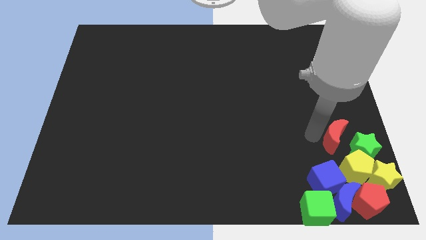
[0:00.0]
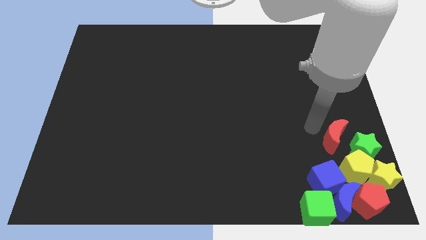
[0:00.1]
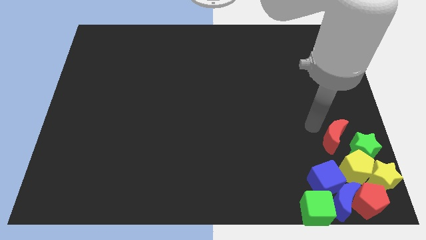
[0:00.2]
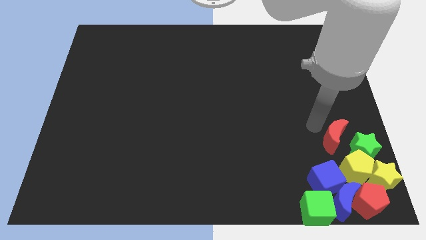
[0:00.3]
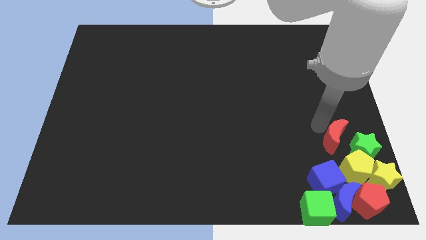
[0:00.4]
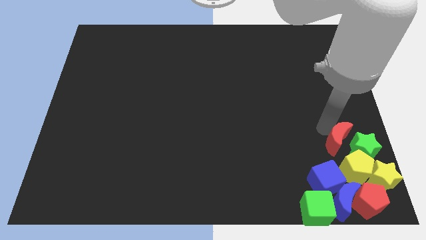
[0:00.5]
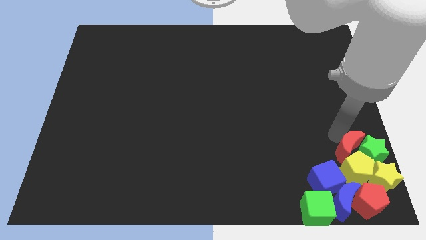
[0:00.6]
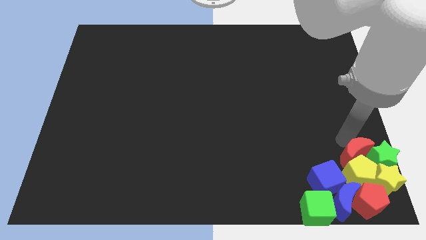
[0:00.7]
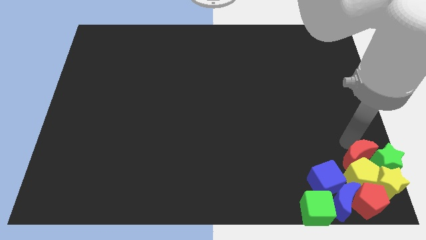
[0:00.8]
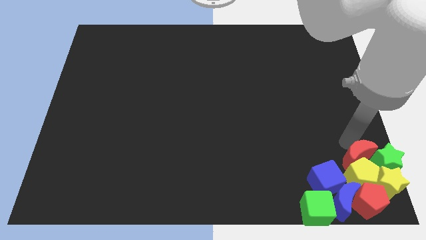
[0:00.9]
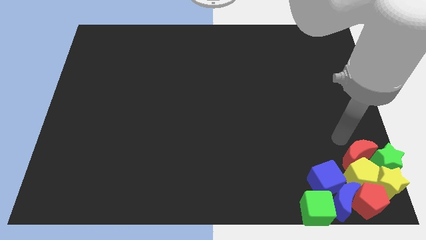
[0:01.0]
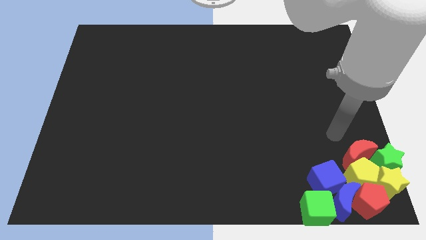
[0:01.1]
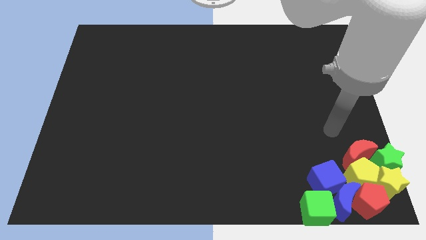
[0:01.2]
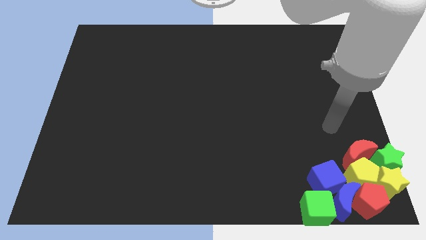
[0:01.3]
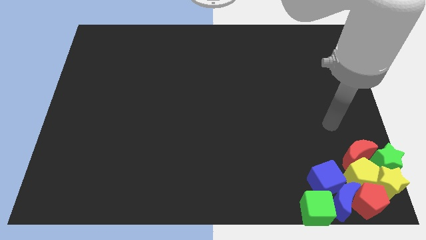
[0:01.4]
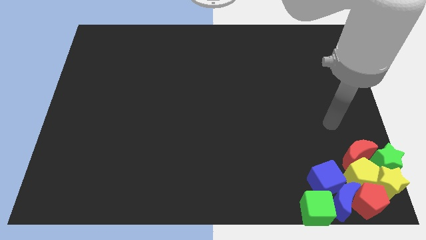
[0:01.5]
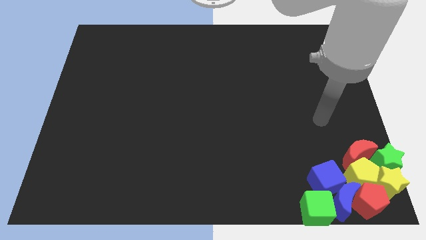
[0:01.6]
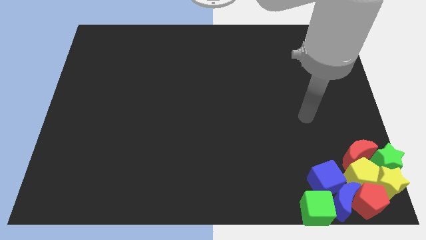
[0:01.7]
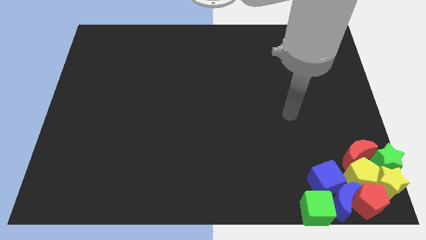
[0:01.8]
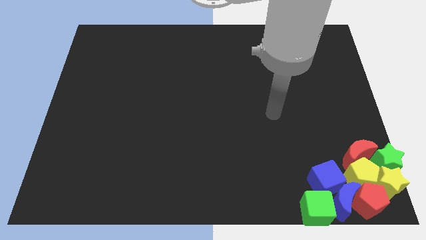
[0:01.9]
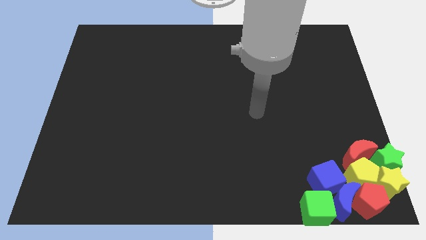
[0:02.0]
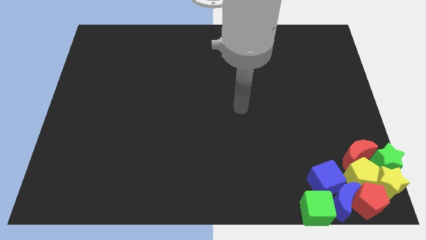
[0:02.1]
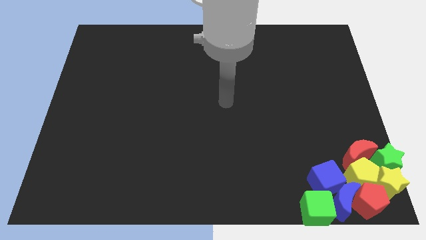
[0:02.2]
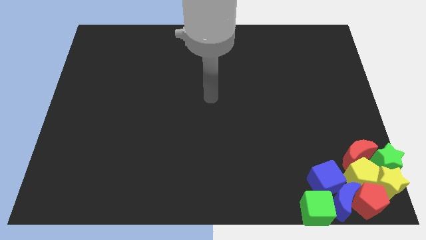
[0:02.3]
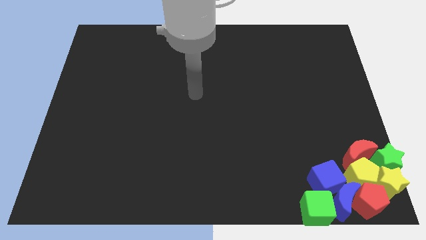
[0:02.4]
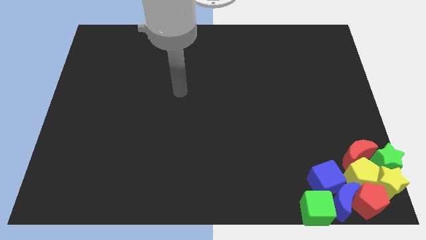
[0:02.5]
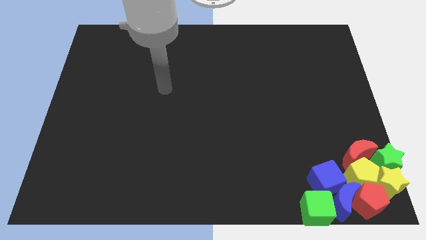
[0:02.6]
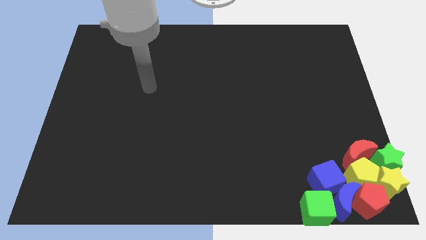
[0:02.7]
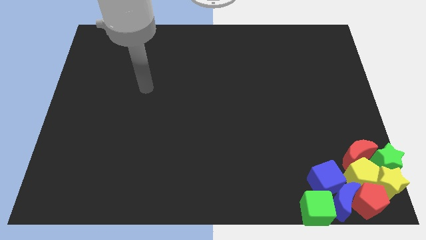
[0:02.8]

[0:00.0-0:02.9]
place red crescent left to green star

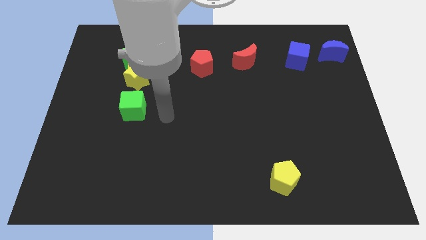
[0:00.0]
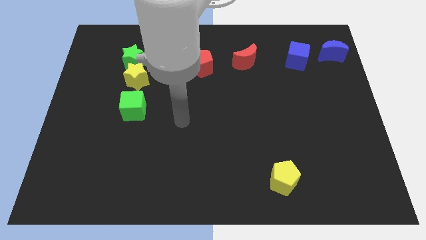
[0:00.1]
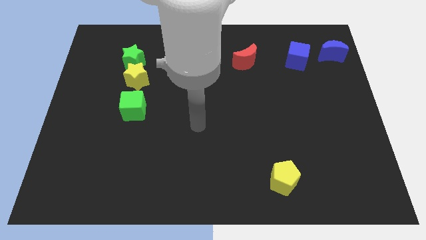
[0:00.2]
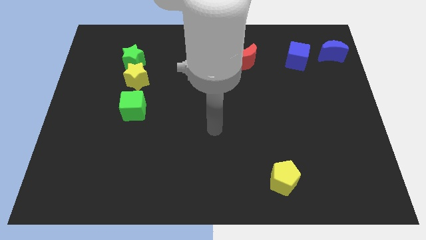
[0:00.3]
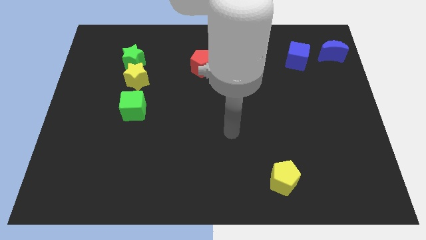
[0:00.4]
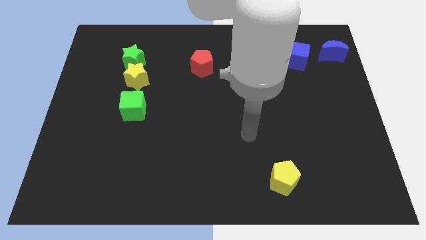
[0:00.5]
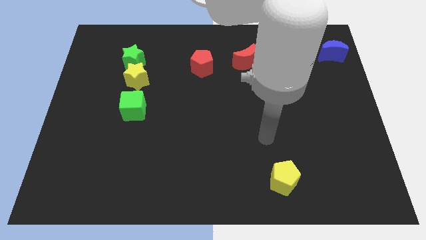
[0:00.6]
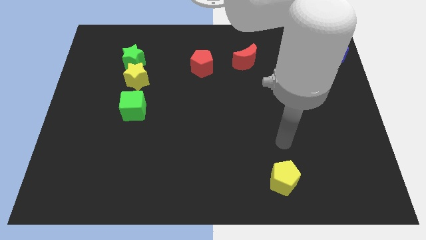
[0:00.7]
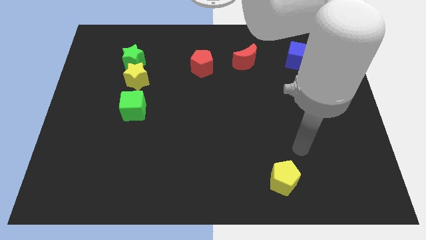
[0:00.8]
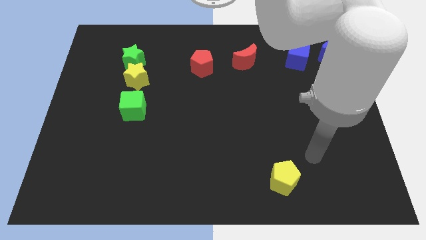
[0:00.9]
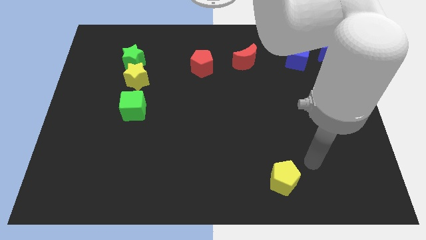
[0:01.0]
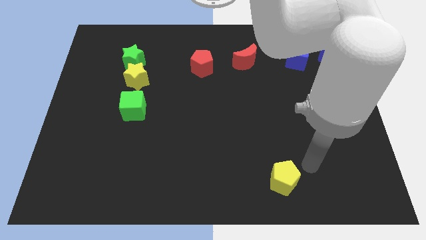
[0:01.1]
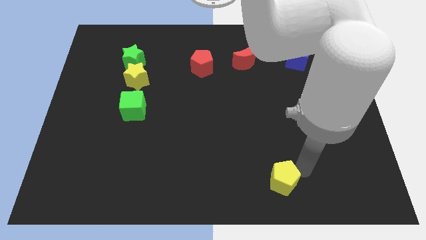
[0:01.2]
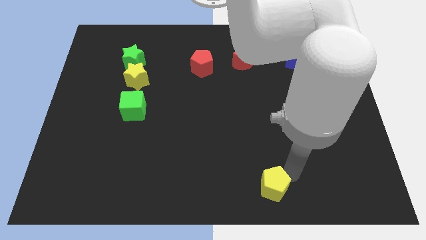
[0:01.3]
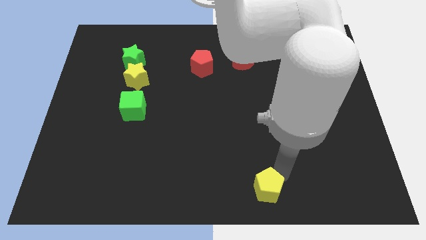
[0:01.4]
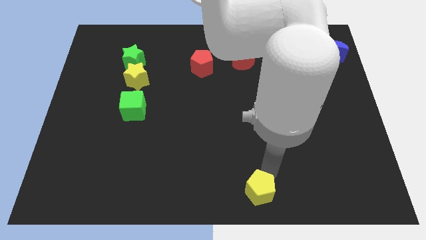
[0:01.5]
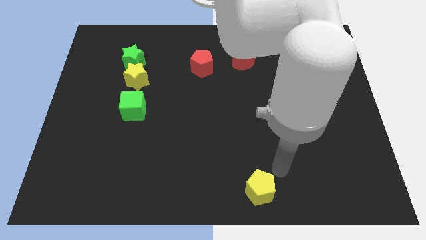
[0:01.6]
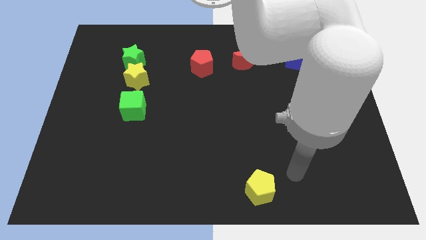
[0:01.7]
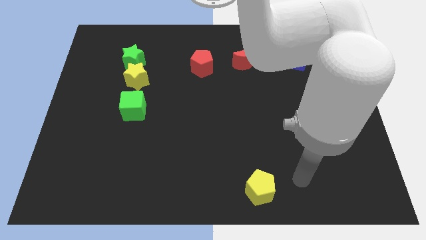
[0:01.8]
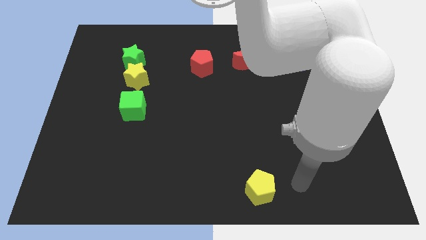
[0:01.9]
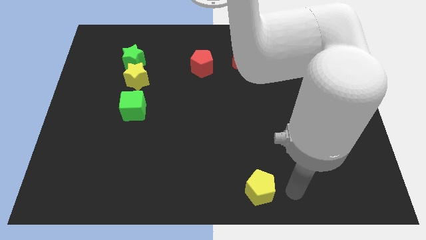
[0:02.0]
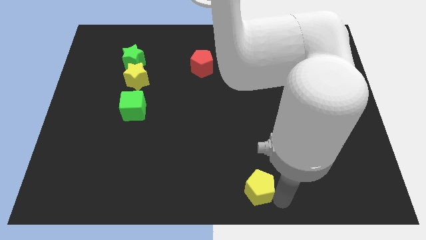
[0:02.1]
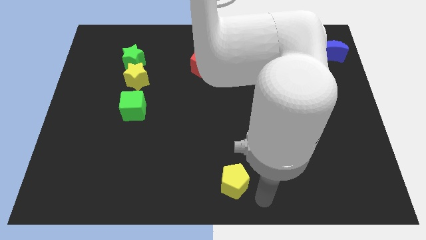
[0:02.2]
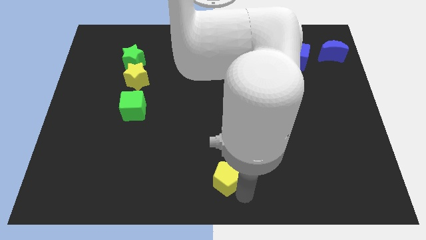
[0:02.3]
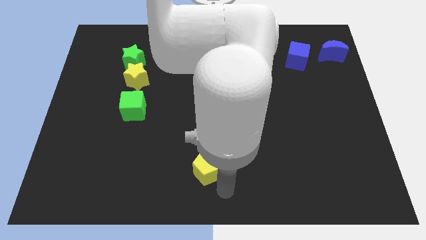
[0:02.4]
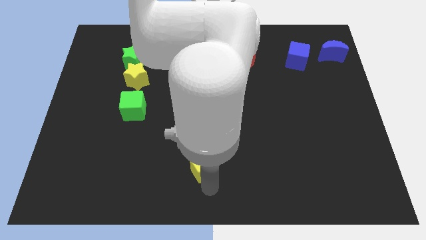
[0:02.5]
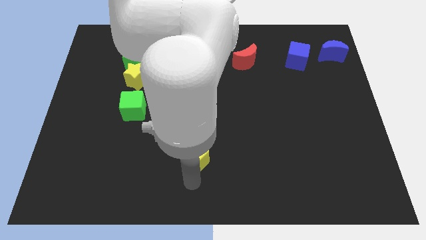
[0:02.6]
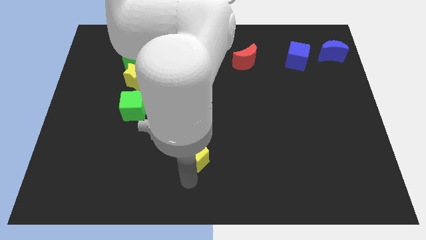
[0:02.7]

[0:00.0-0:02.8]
place the yellow pentagon at the bottom center of the board

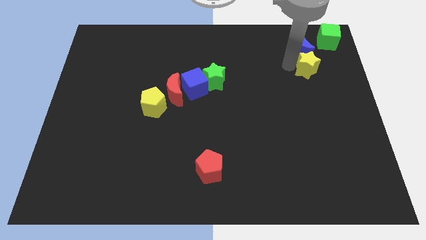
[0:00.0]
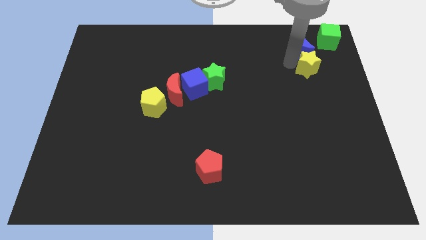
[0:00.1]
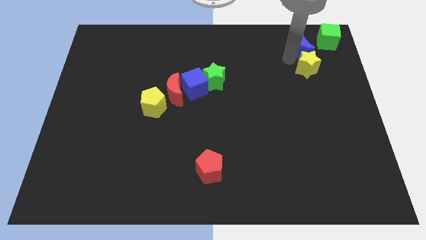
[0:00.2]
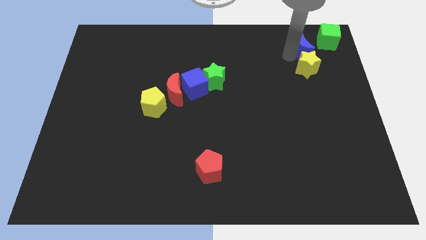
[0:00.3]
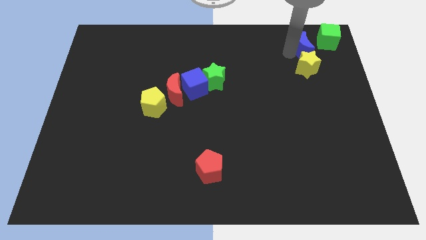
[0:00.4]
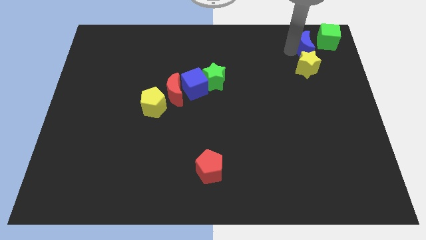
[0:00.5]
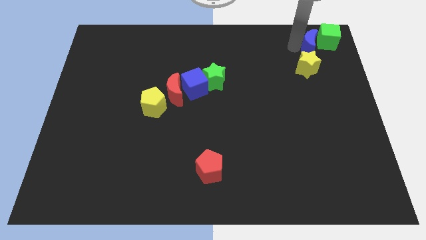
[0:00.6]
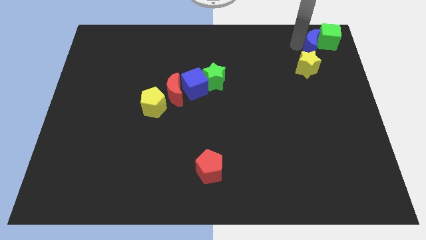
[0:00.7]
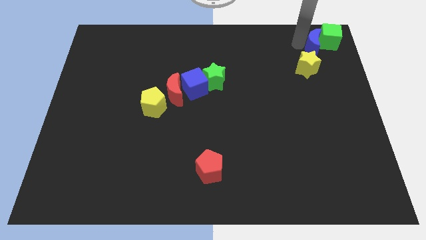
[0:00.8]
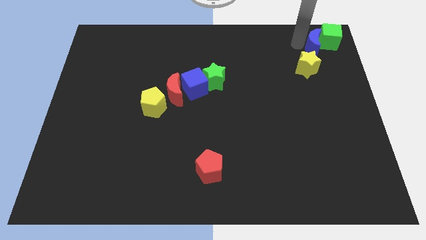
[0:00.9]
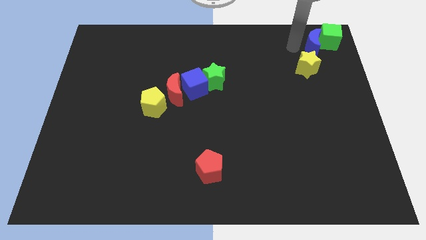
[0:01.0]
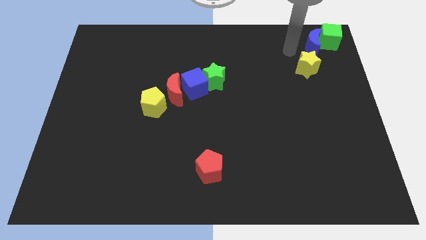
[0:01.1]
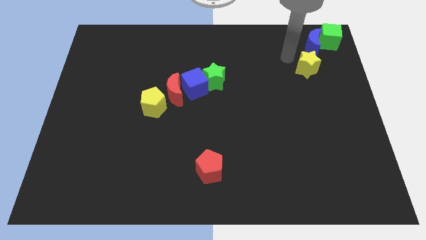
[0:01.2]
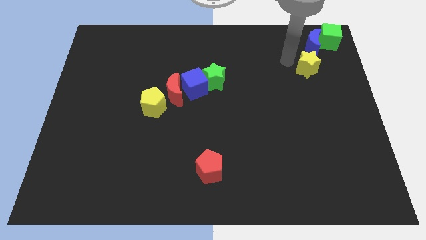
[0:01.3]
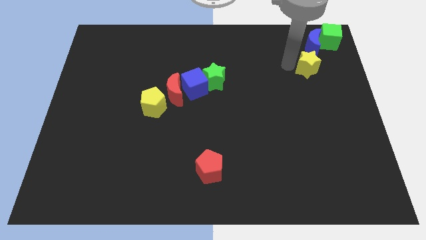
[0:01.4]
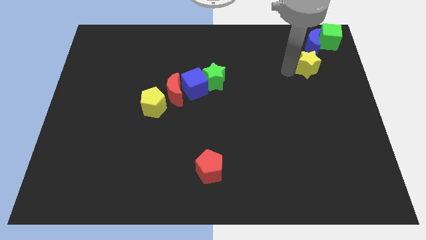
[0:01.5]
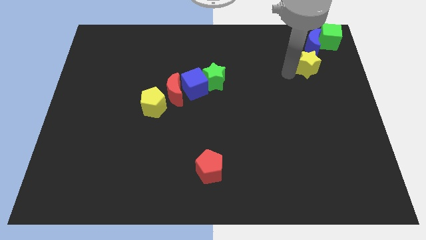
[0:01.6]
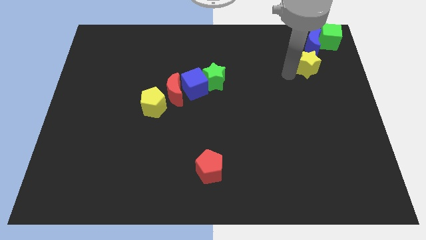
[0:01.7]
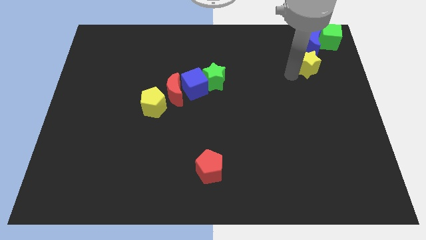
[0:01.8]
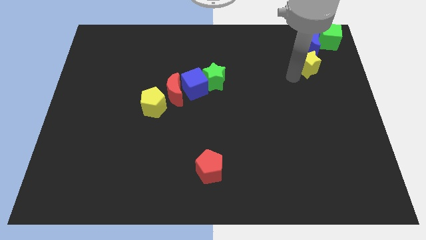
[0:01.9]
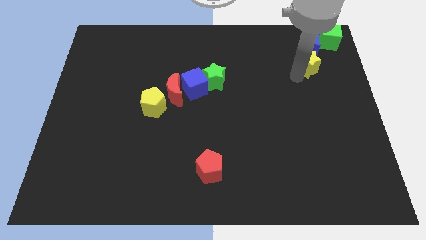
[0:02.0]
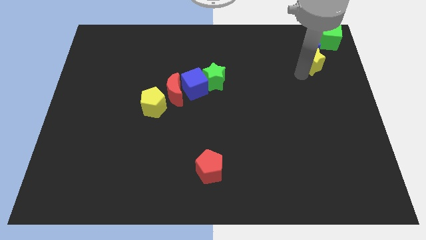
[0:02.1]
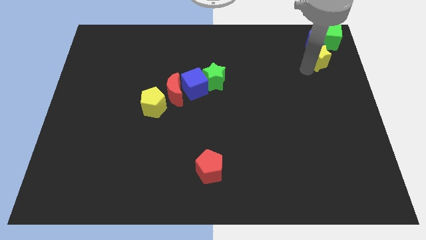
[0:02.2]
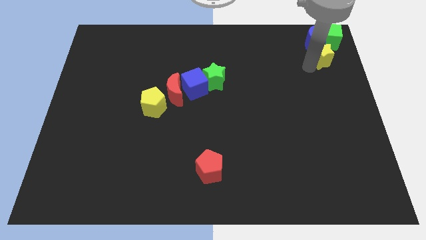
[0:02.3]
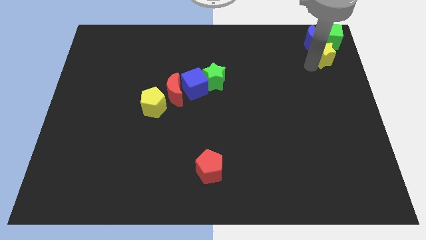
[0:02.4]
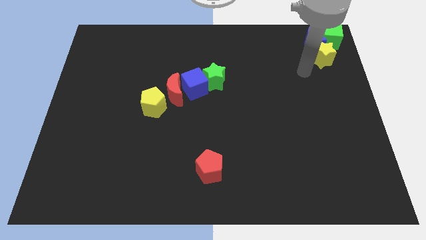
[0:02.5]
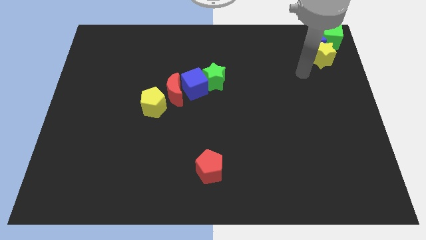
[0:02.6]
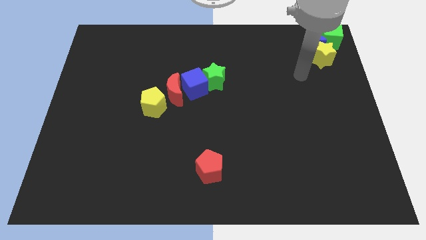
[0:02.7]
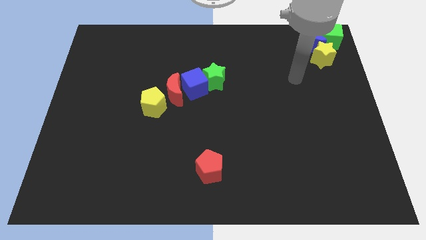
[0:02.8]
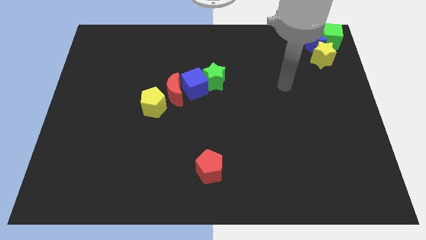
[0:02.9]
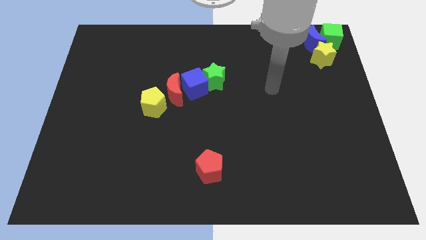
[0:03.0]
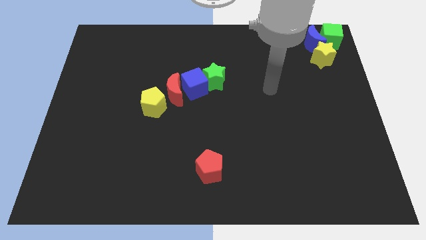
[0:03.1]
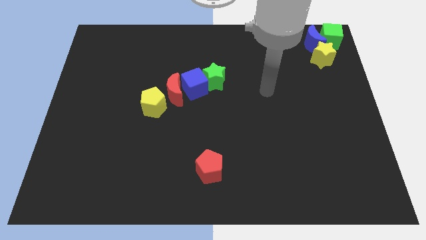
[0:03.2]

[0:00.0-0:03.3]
put the yellow star and blue moon into the green cube

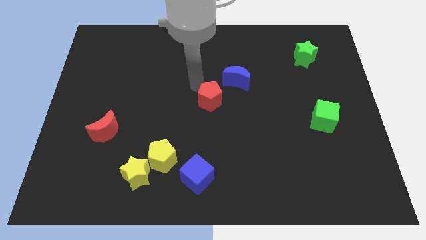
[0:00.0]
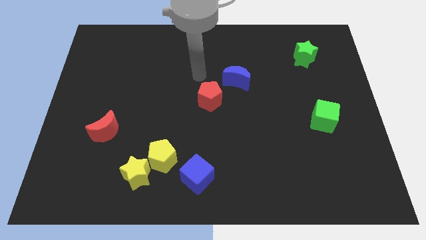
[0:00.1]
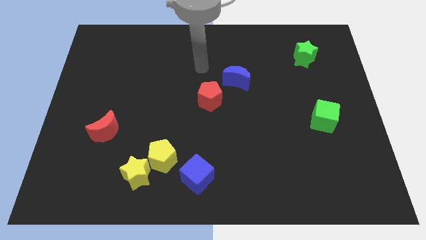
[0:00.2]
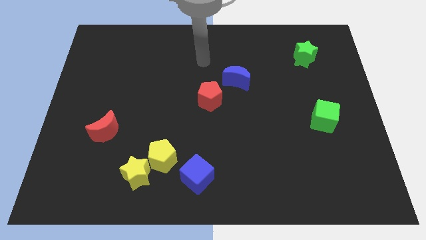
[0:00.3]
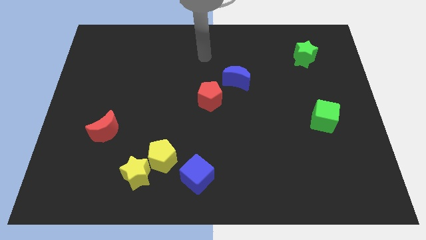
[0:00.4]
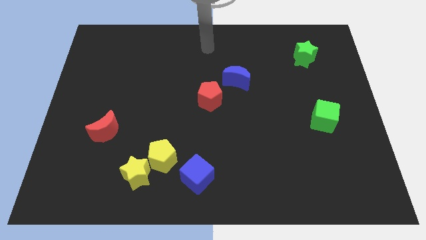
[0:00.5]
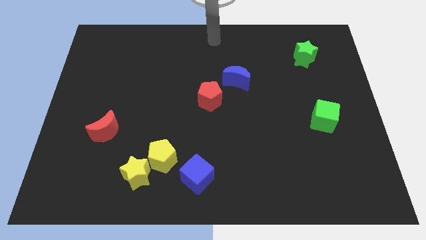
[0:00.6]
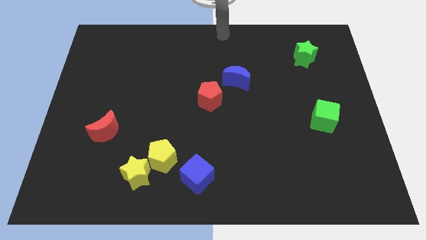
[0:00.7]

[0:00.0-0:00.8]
point your arm at the top center of the board
